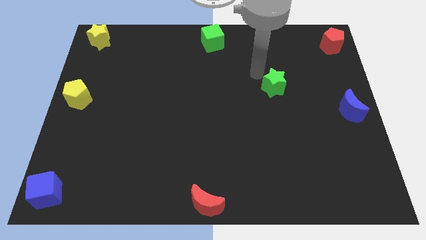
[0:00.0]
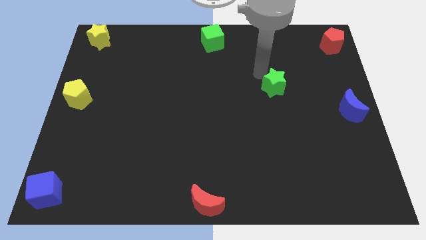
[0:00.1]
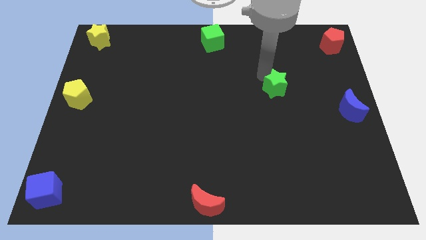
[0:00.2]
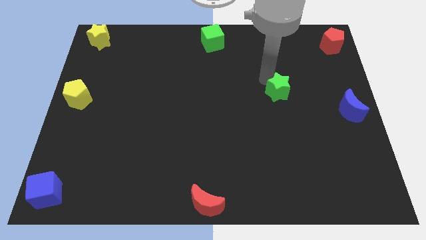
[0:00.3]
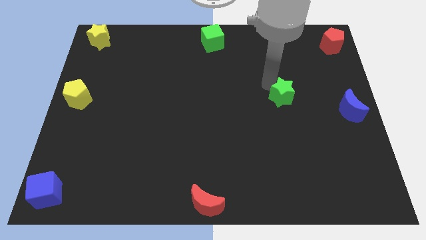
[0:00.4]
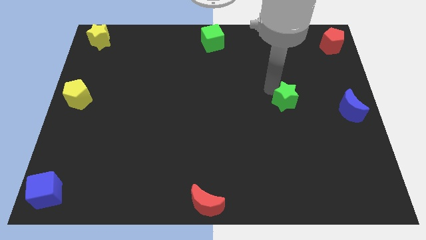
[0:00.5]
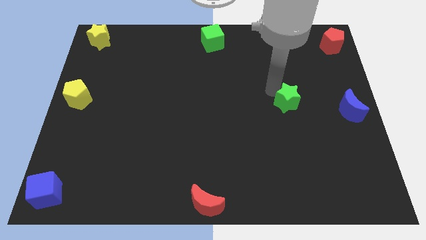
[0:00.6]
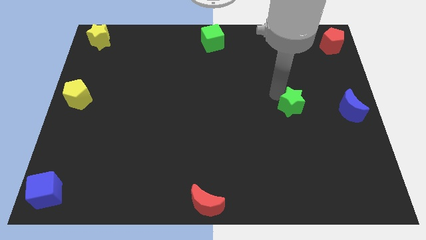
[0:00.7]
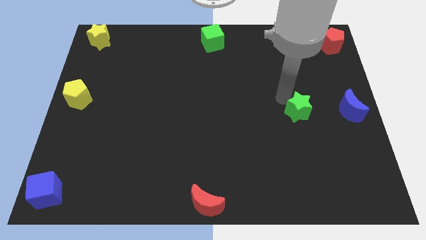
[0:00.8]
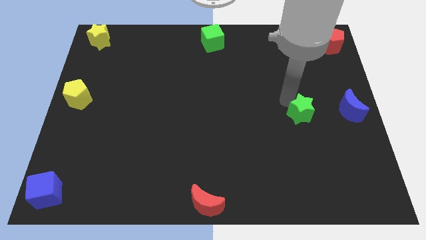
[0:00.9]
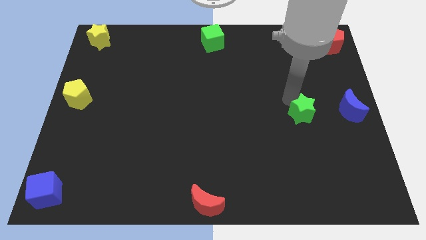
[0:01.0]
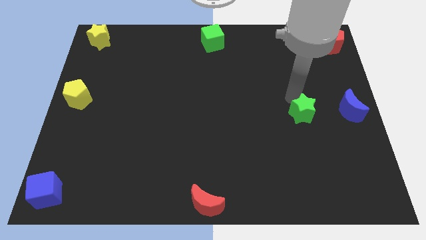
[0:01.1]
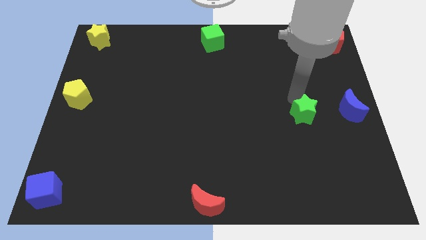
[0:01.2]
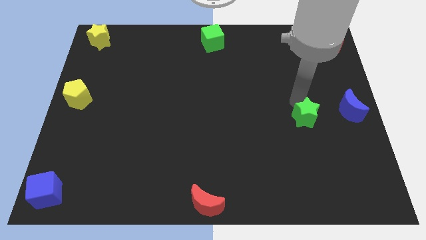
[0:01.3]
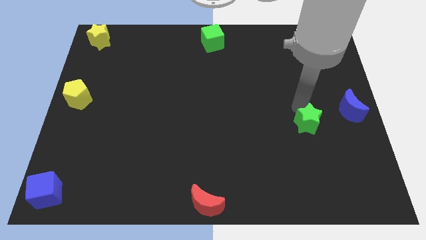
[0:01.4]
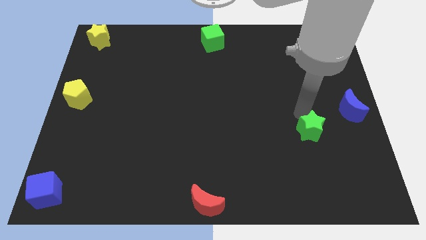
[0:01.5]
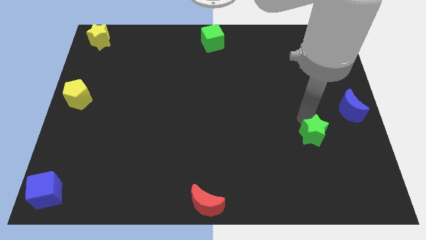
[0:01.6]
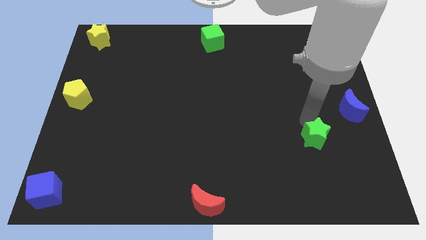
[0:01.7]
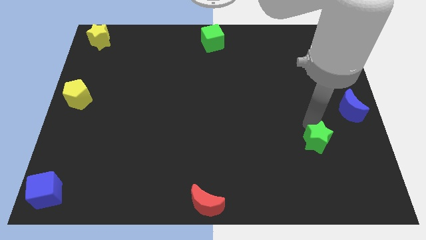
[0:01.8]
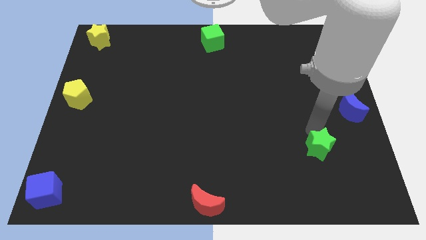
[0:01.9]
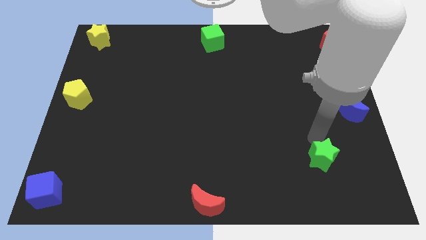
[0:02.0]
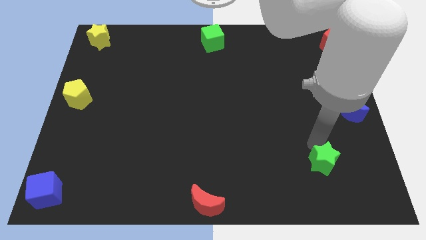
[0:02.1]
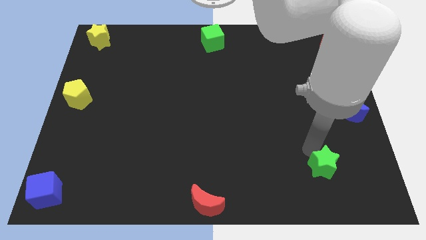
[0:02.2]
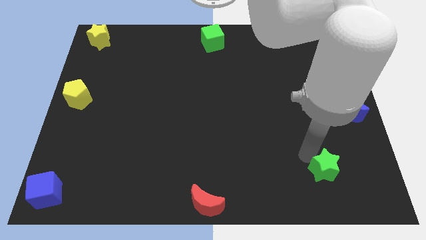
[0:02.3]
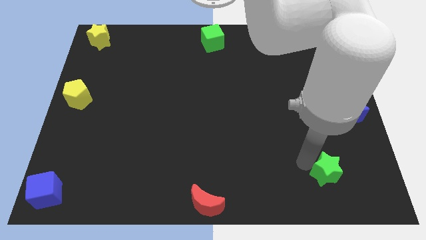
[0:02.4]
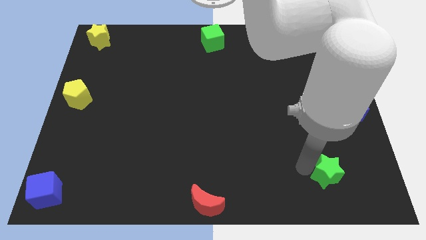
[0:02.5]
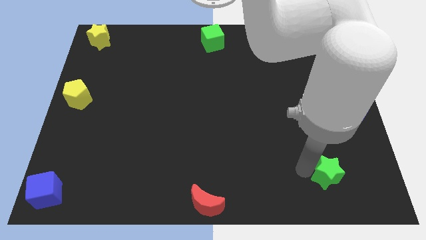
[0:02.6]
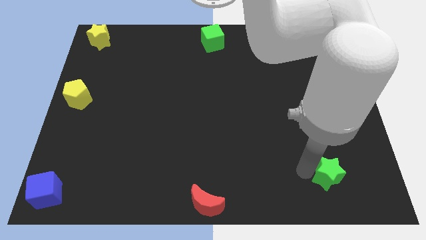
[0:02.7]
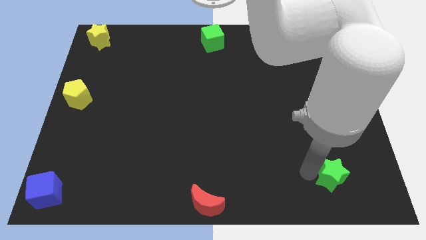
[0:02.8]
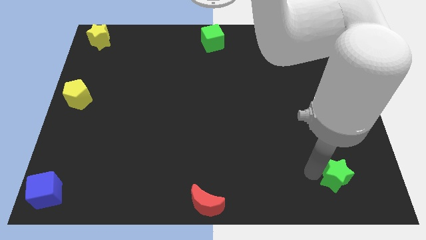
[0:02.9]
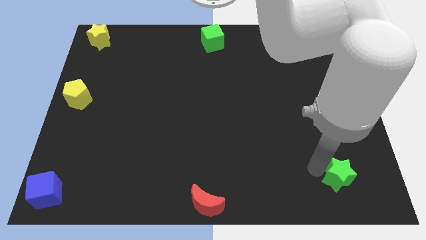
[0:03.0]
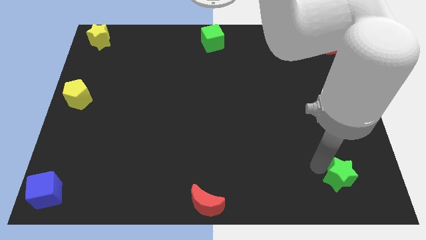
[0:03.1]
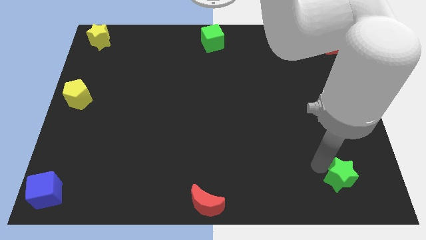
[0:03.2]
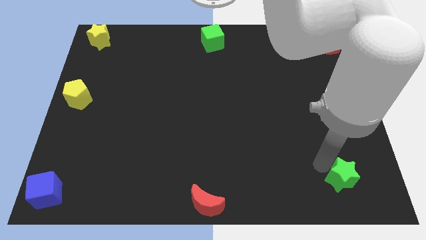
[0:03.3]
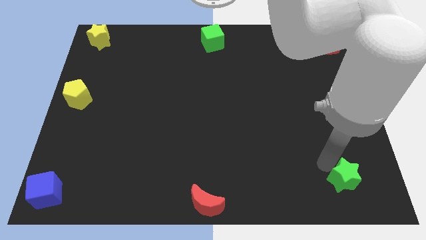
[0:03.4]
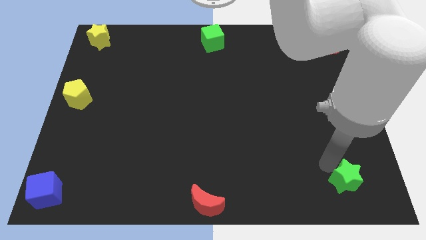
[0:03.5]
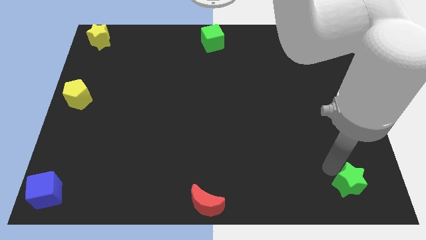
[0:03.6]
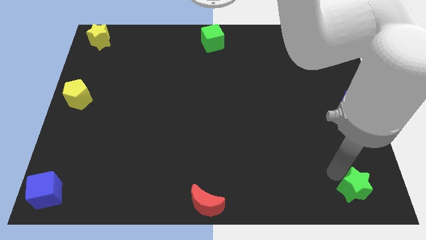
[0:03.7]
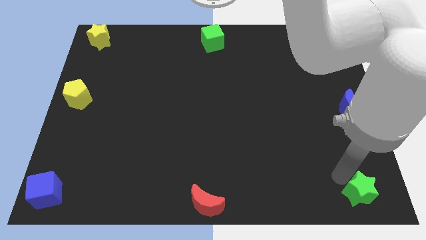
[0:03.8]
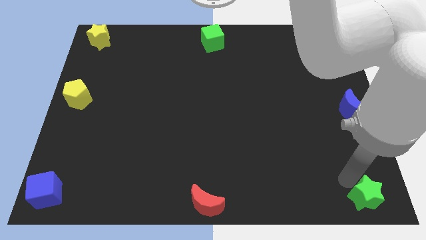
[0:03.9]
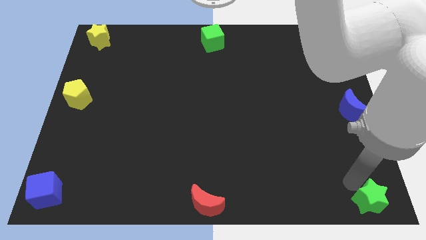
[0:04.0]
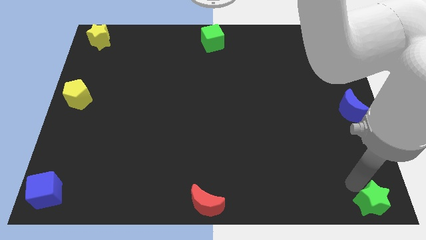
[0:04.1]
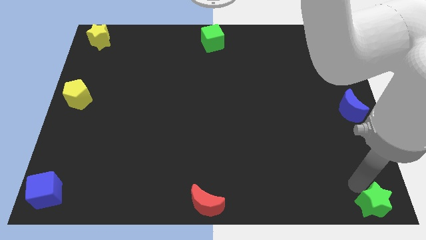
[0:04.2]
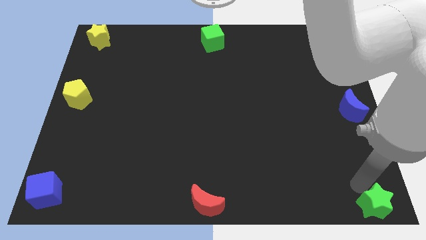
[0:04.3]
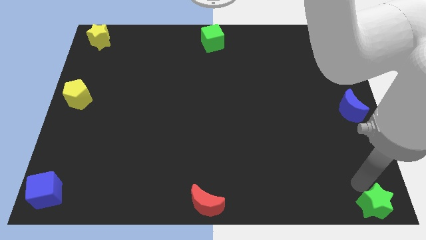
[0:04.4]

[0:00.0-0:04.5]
push the green star to the bottom right to the board

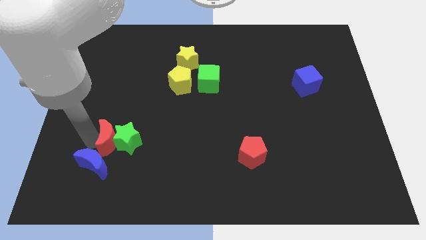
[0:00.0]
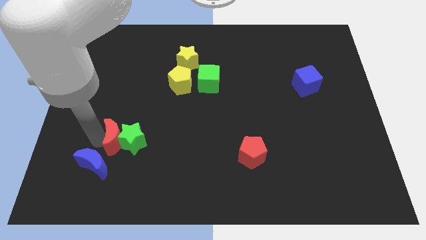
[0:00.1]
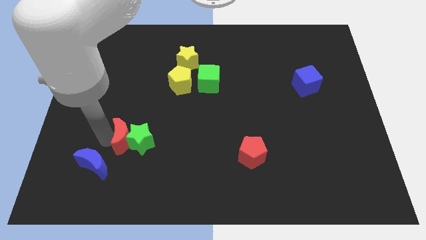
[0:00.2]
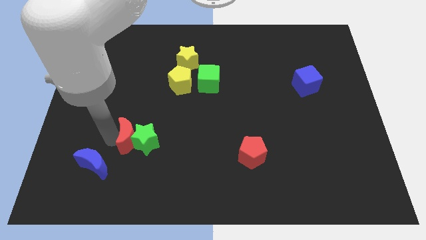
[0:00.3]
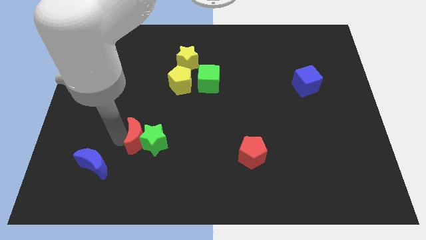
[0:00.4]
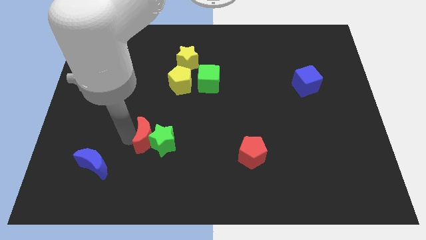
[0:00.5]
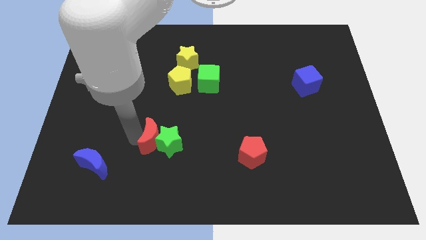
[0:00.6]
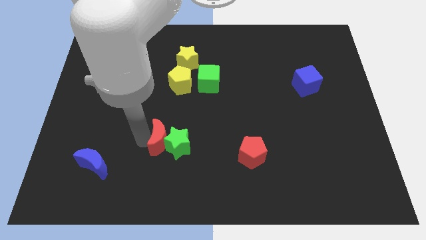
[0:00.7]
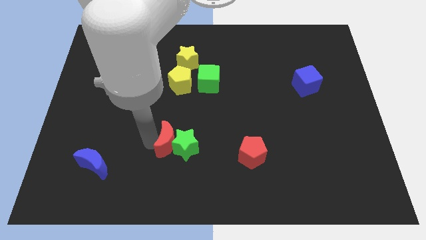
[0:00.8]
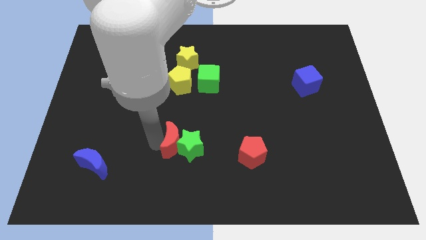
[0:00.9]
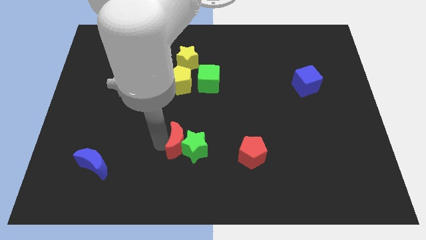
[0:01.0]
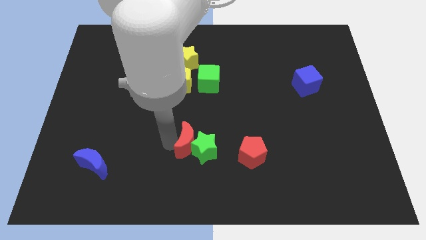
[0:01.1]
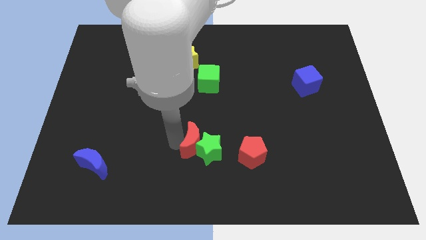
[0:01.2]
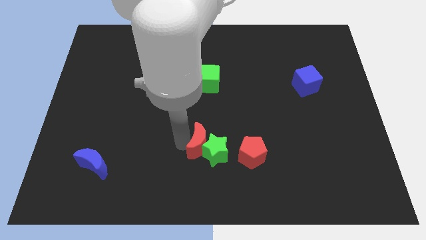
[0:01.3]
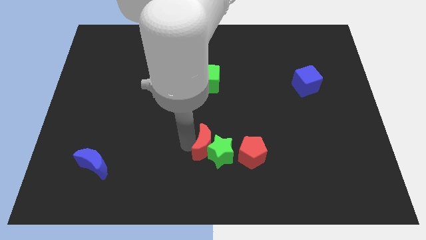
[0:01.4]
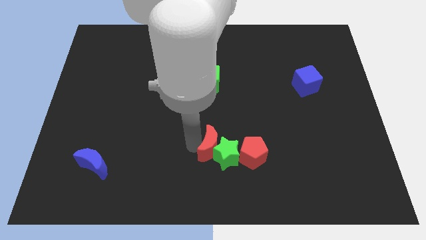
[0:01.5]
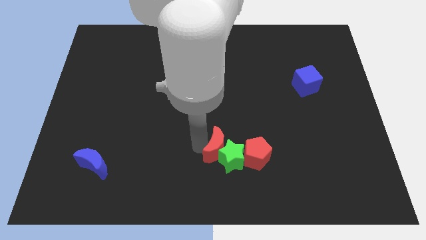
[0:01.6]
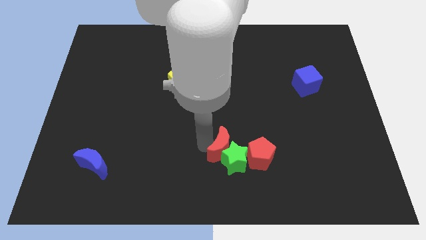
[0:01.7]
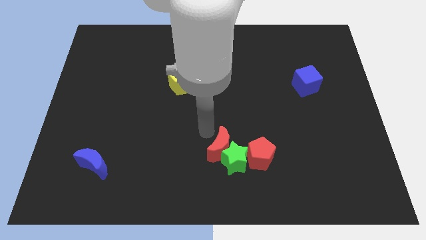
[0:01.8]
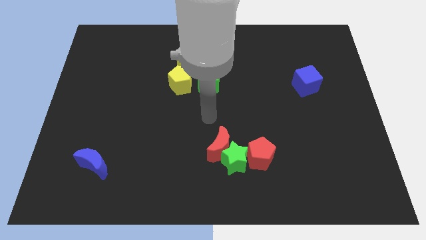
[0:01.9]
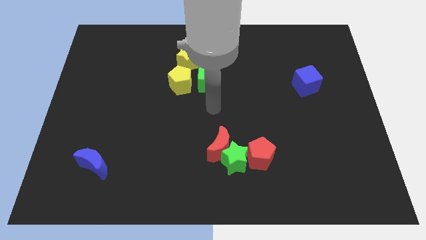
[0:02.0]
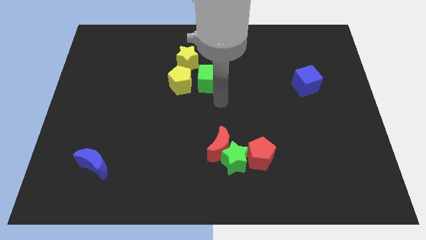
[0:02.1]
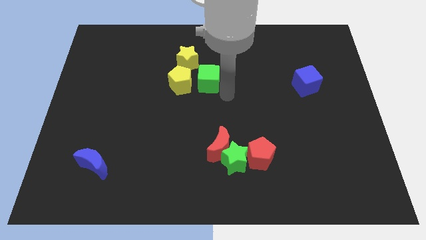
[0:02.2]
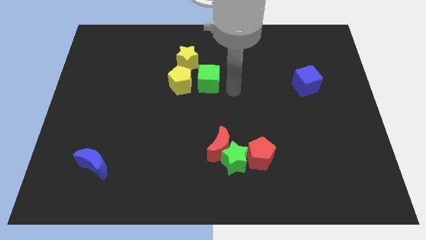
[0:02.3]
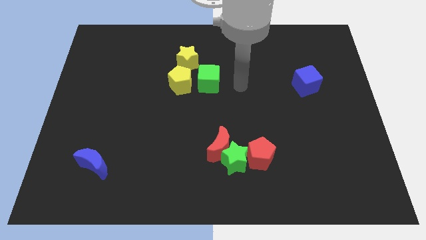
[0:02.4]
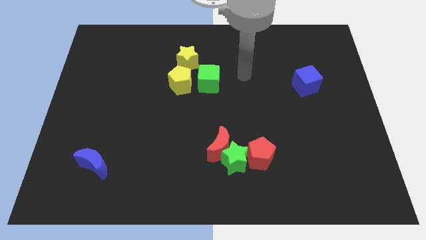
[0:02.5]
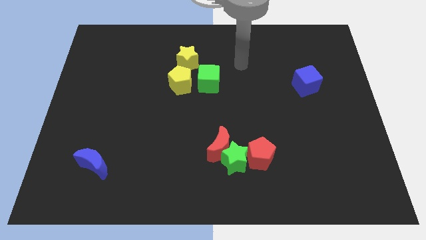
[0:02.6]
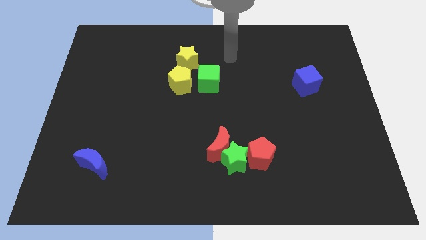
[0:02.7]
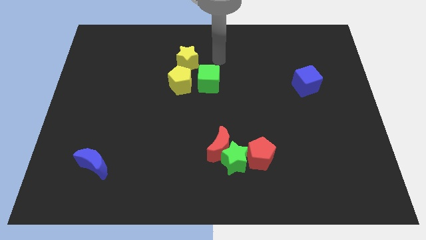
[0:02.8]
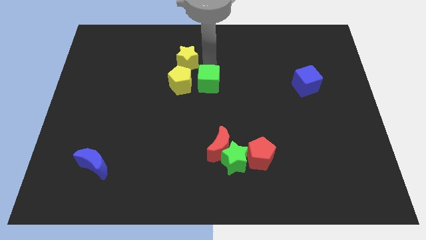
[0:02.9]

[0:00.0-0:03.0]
push the red moon and green star into the red pentagon

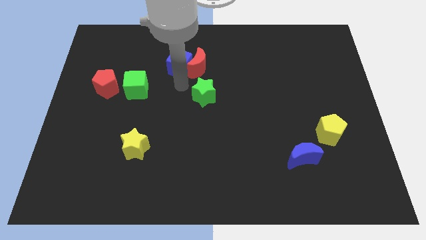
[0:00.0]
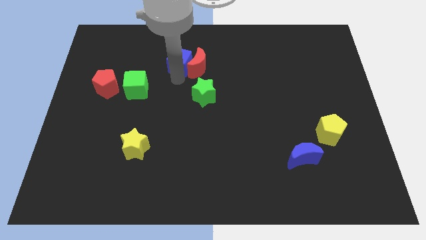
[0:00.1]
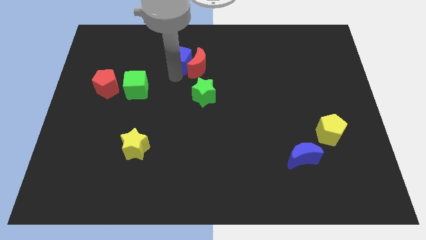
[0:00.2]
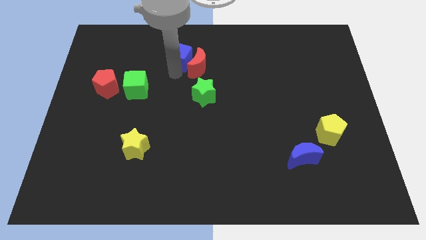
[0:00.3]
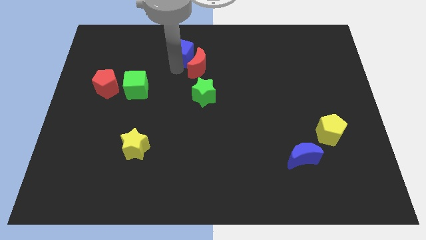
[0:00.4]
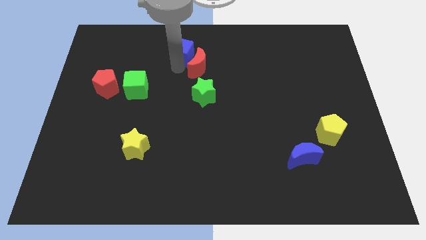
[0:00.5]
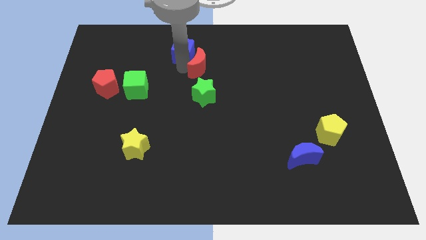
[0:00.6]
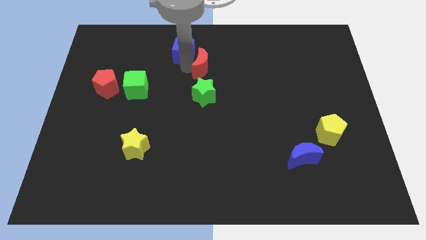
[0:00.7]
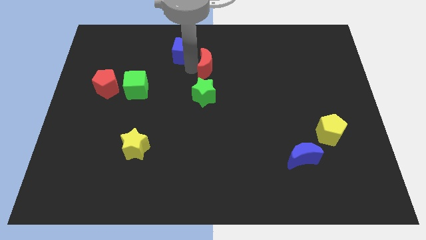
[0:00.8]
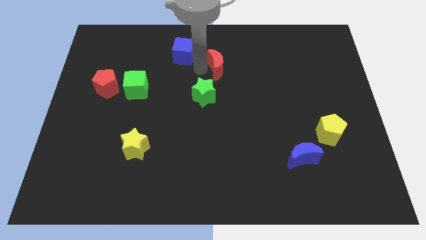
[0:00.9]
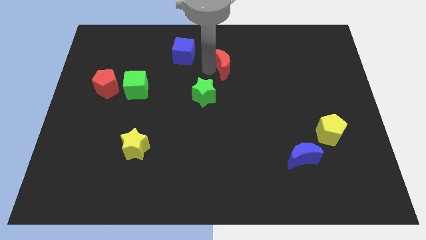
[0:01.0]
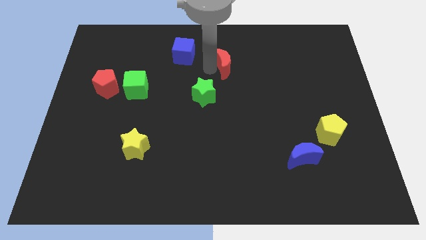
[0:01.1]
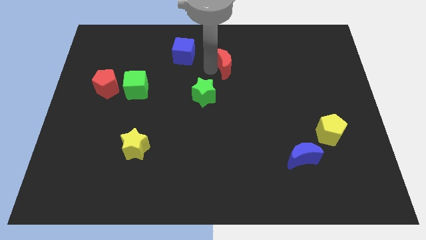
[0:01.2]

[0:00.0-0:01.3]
separate the blue cube and the red moon

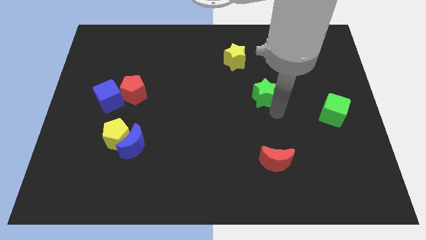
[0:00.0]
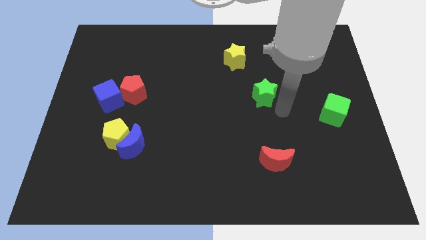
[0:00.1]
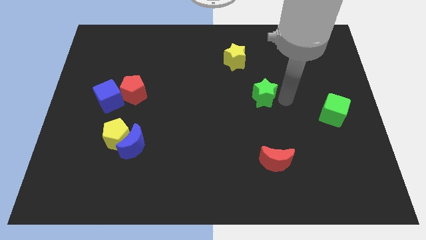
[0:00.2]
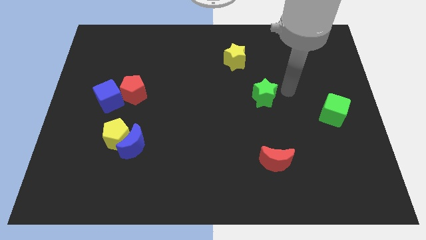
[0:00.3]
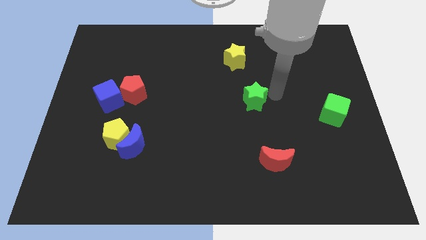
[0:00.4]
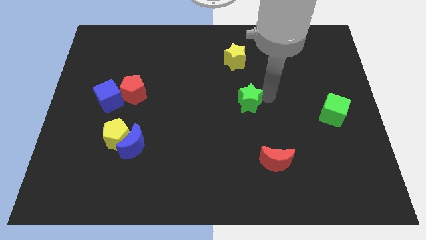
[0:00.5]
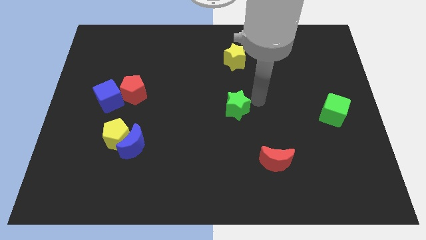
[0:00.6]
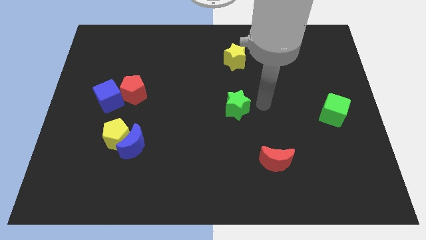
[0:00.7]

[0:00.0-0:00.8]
place the green star below the yellow star
